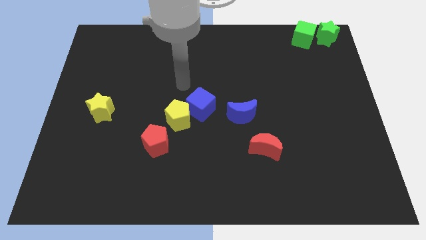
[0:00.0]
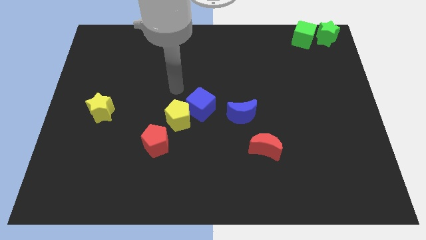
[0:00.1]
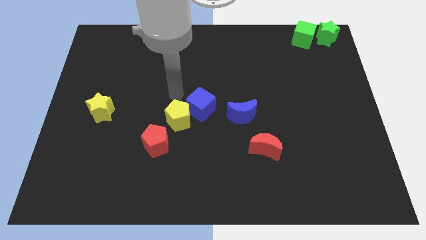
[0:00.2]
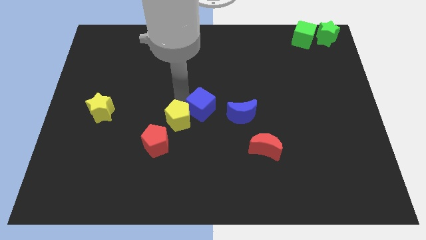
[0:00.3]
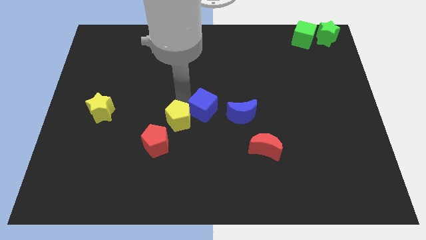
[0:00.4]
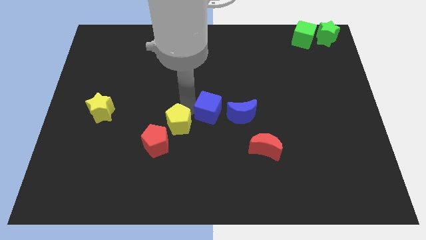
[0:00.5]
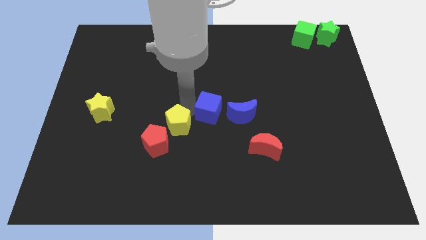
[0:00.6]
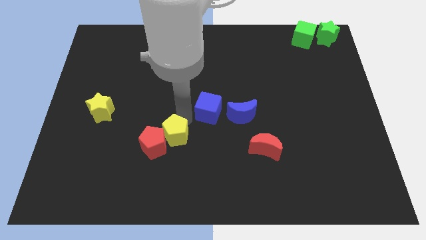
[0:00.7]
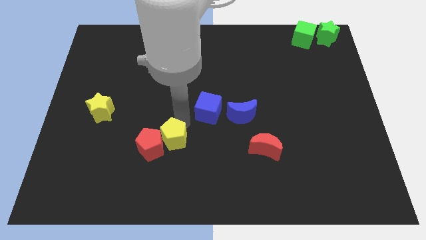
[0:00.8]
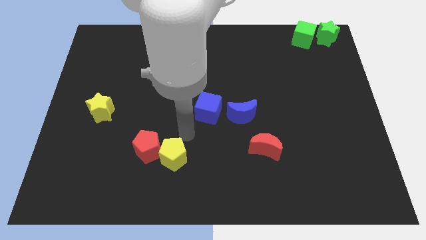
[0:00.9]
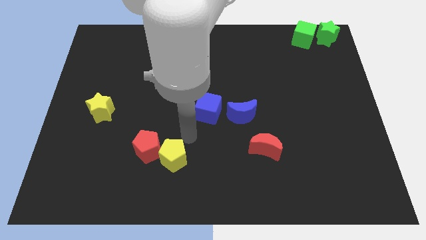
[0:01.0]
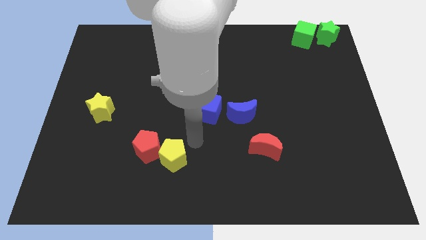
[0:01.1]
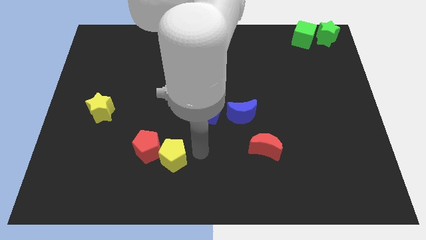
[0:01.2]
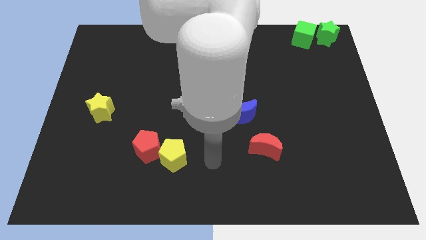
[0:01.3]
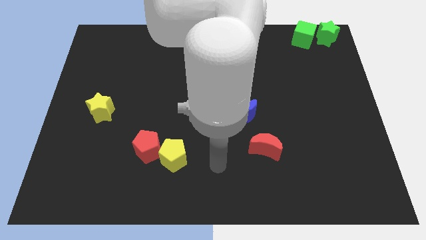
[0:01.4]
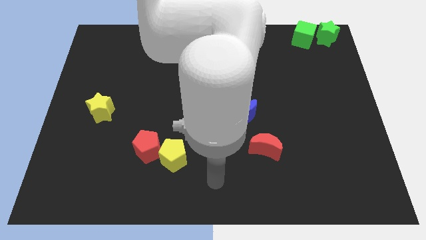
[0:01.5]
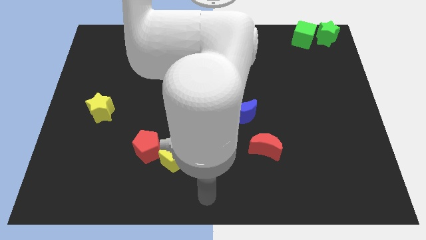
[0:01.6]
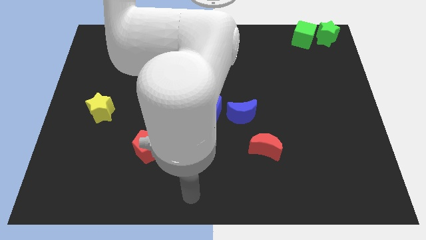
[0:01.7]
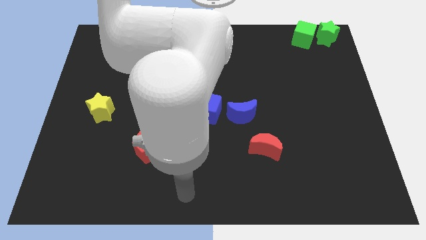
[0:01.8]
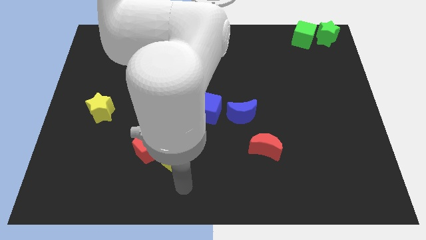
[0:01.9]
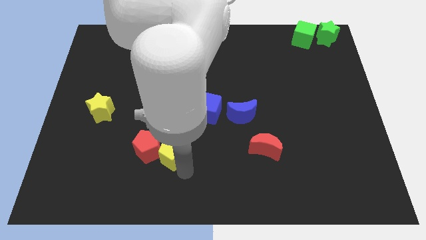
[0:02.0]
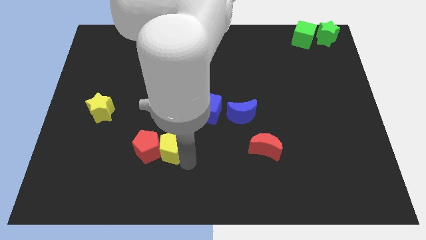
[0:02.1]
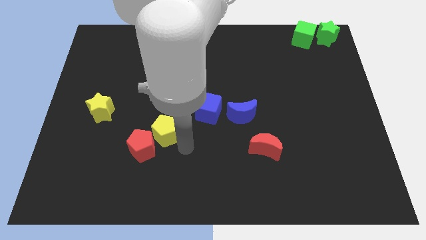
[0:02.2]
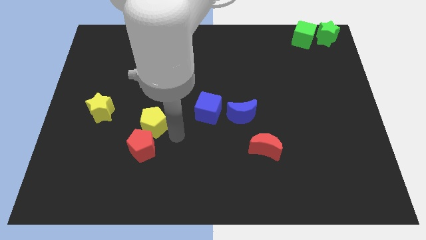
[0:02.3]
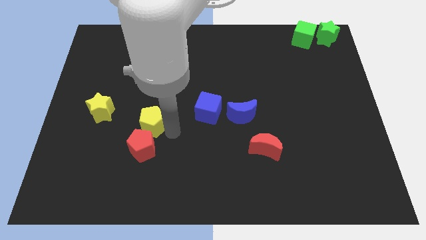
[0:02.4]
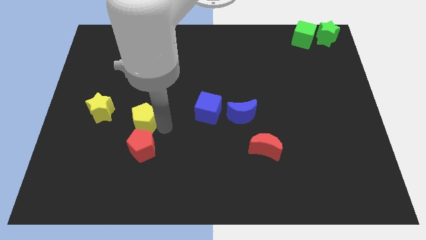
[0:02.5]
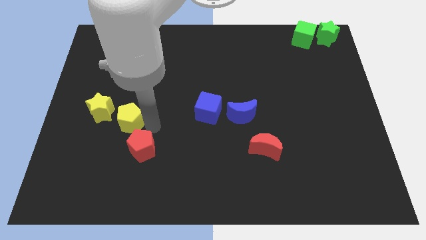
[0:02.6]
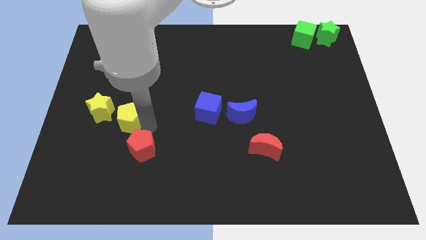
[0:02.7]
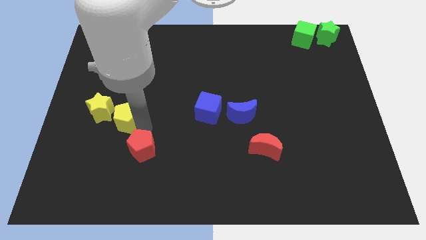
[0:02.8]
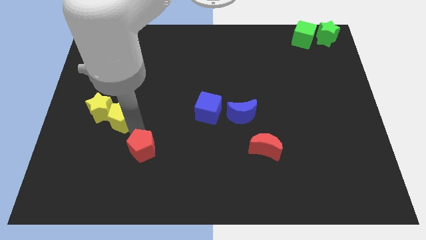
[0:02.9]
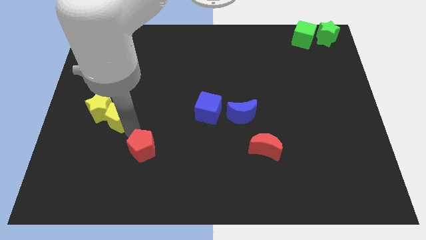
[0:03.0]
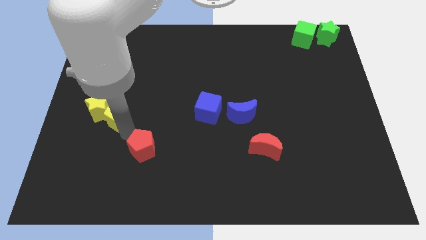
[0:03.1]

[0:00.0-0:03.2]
separate yellow pentagon and blue cube

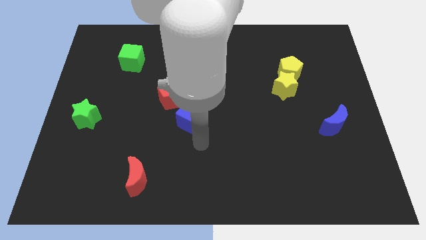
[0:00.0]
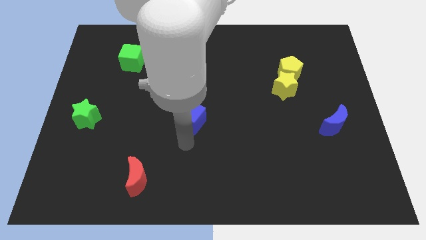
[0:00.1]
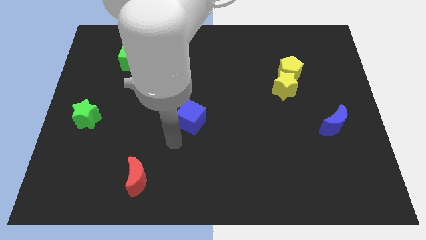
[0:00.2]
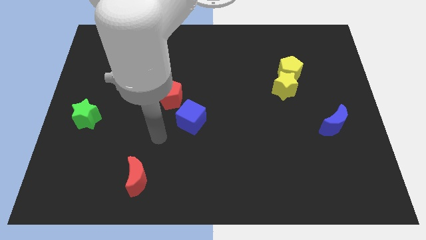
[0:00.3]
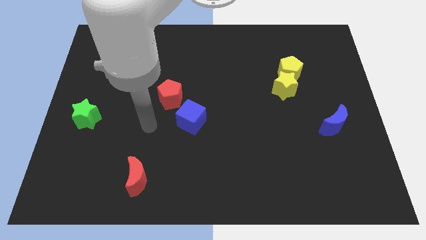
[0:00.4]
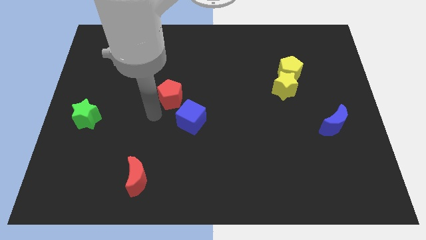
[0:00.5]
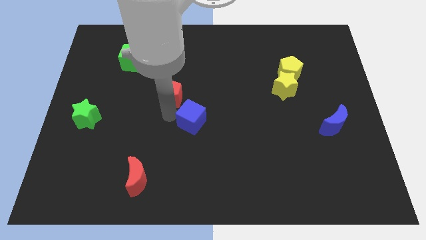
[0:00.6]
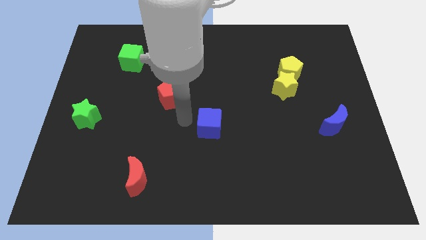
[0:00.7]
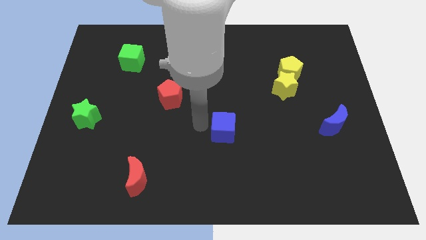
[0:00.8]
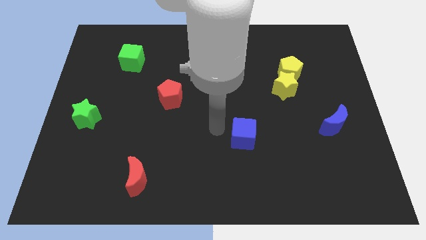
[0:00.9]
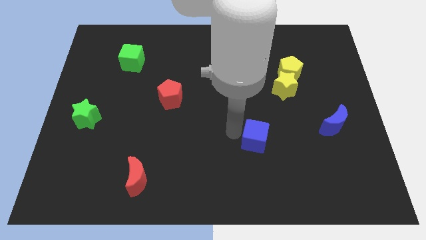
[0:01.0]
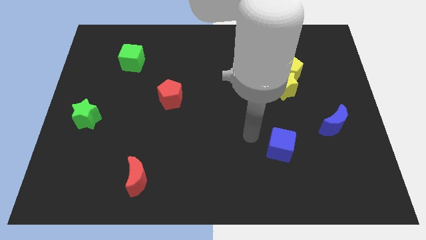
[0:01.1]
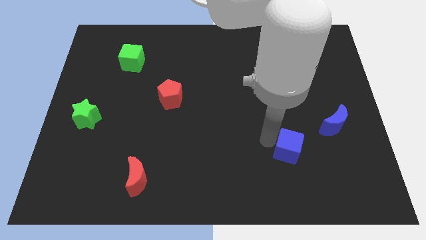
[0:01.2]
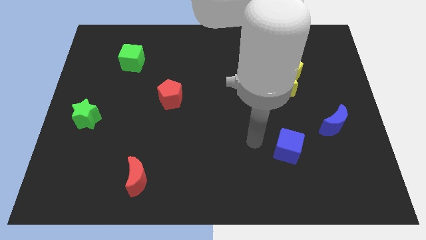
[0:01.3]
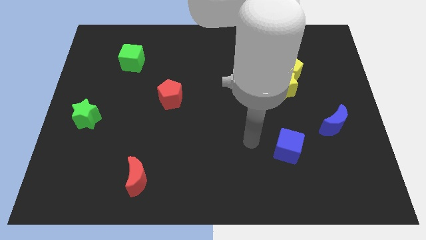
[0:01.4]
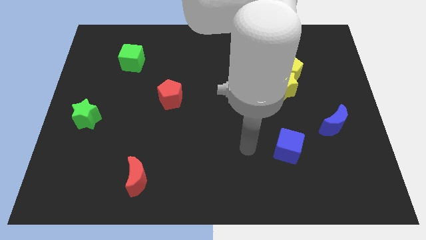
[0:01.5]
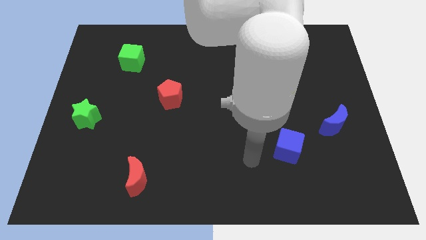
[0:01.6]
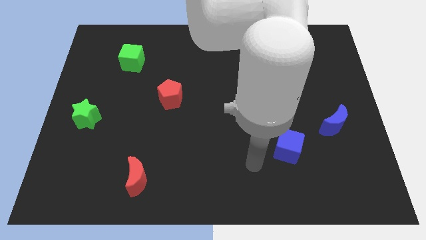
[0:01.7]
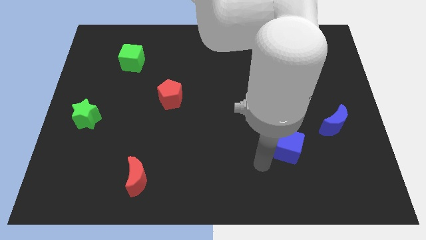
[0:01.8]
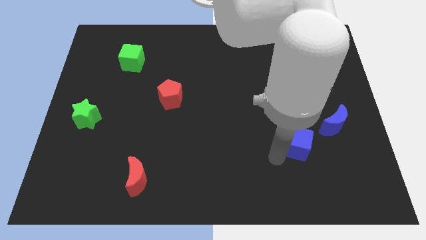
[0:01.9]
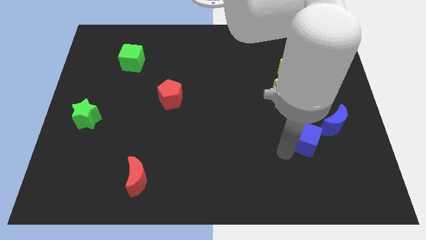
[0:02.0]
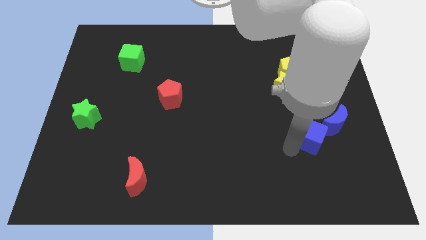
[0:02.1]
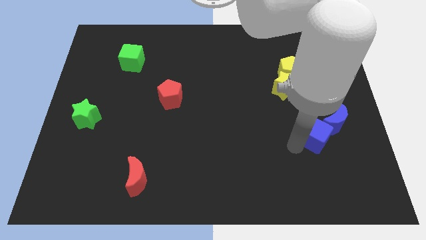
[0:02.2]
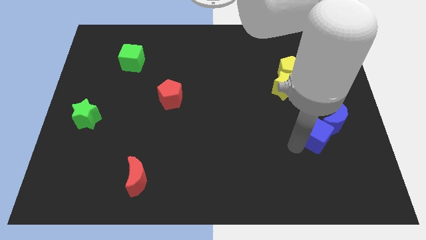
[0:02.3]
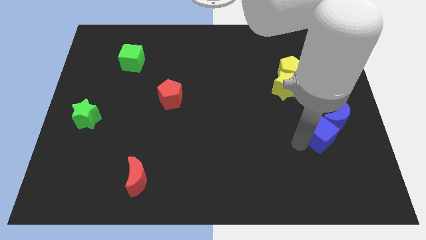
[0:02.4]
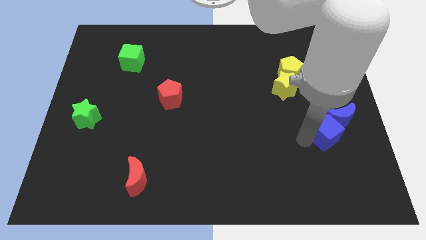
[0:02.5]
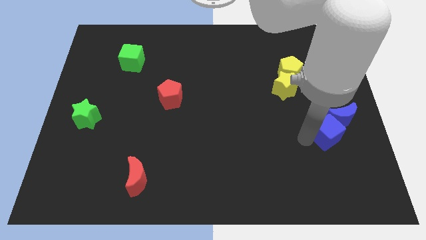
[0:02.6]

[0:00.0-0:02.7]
move the blue cube to the bottom left of the blue crescent

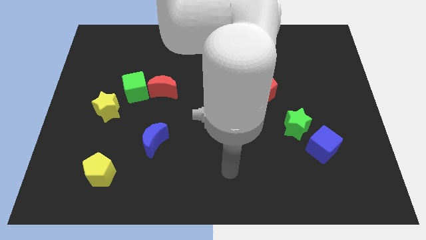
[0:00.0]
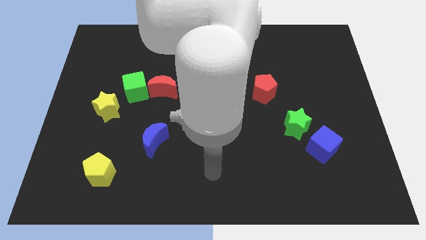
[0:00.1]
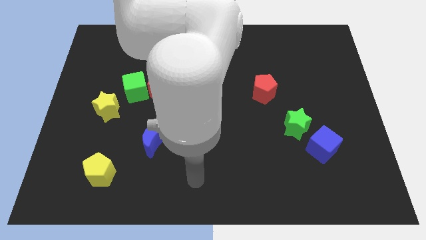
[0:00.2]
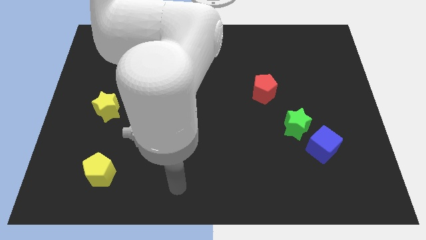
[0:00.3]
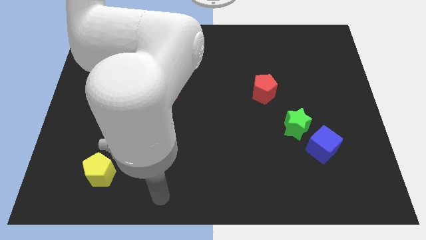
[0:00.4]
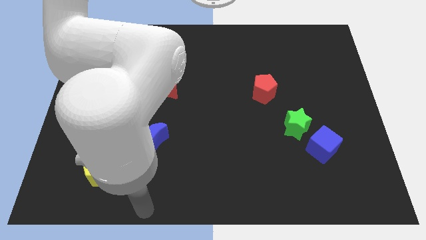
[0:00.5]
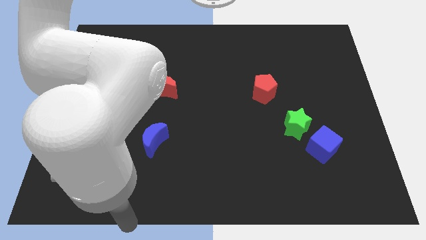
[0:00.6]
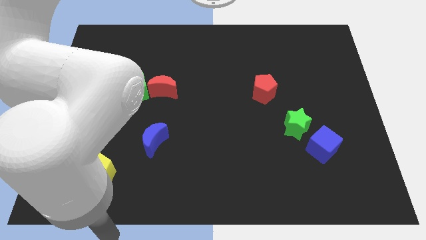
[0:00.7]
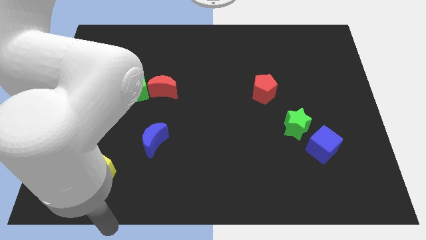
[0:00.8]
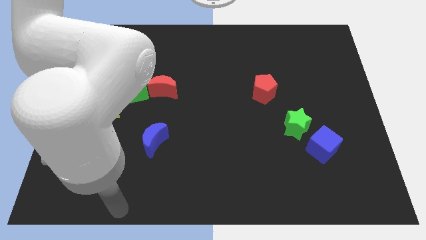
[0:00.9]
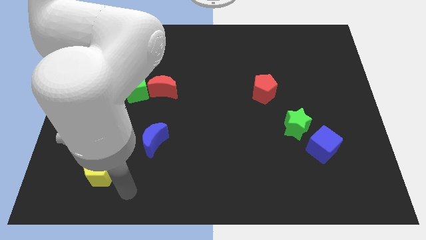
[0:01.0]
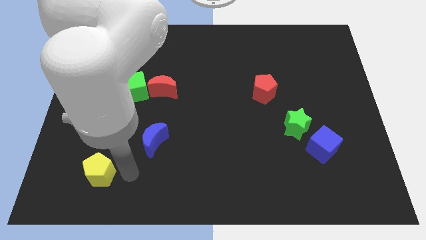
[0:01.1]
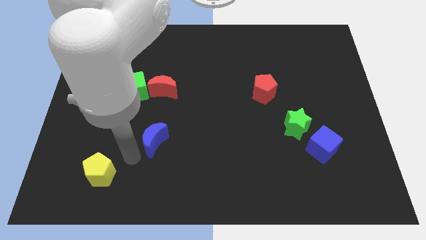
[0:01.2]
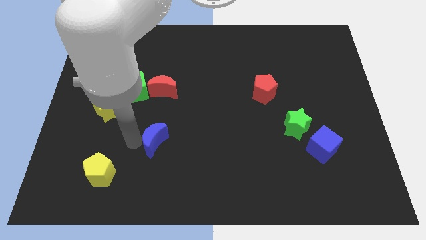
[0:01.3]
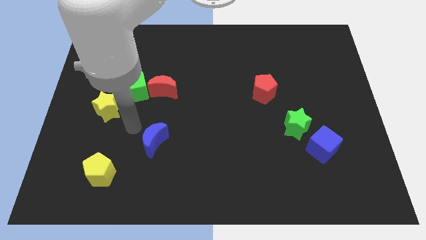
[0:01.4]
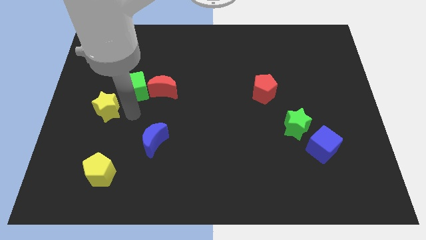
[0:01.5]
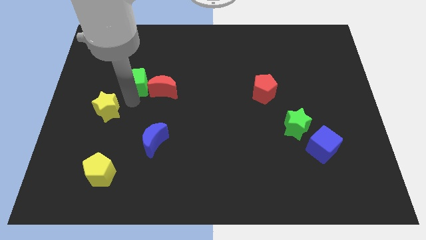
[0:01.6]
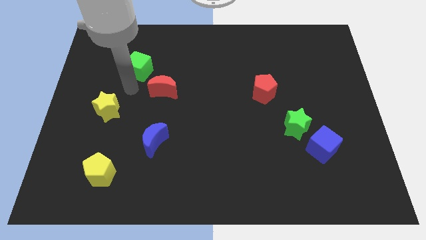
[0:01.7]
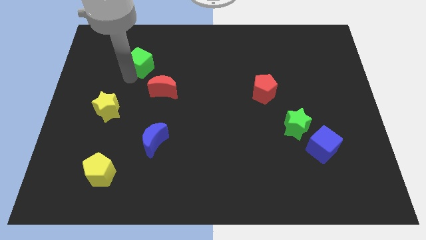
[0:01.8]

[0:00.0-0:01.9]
move your arm and slightly push the green cube upwards

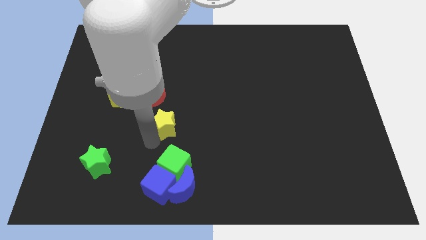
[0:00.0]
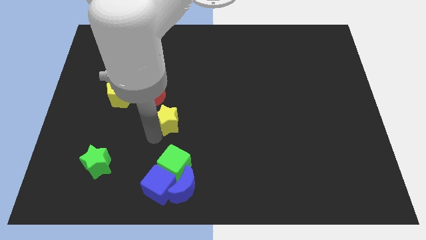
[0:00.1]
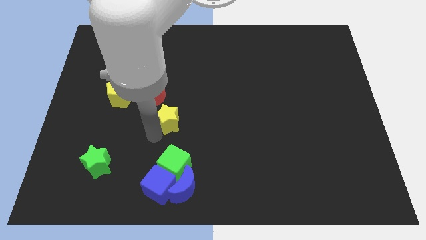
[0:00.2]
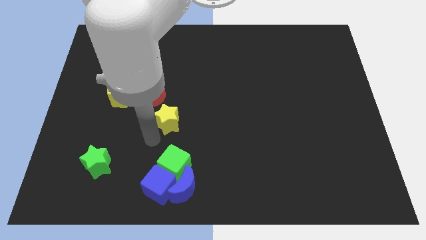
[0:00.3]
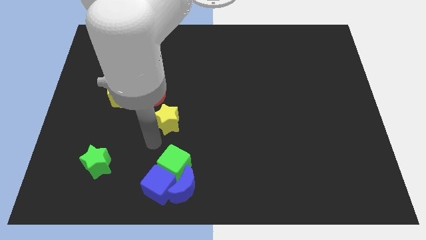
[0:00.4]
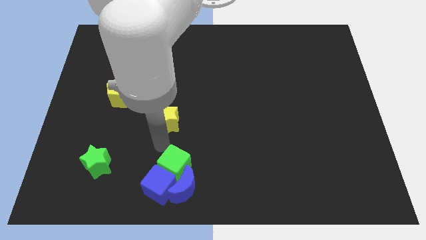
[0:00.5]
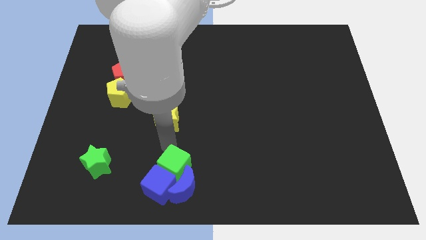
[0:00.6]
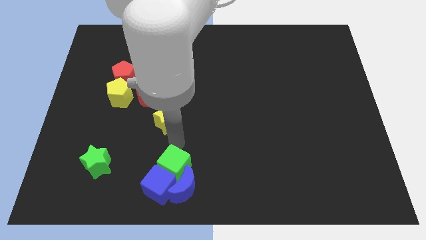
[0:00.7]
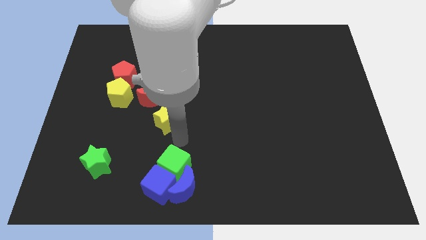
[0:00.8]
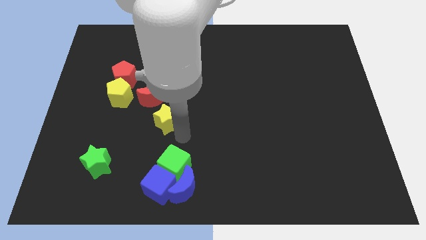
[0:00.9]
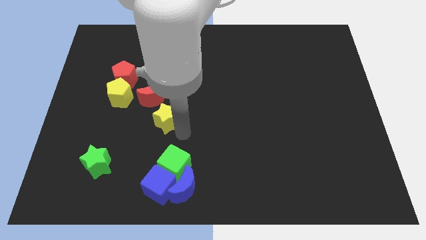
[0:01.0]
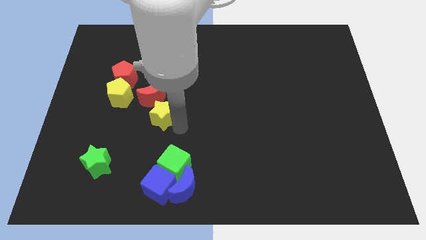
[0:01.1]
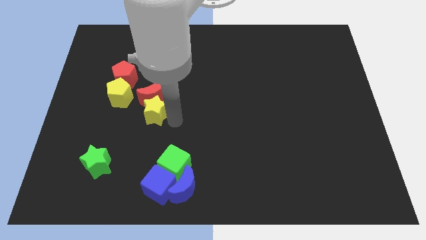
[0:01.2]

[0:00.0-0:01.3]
push the yellow star to the bottom of the red crescent
